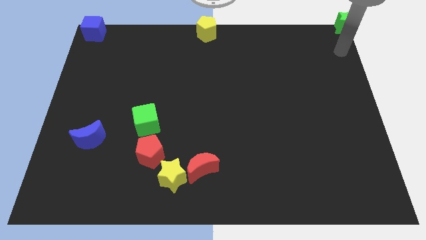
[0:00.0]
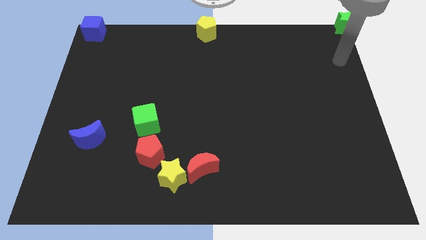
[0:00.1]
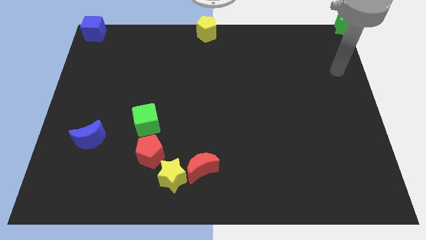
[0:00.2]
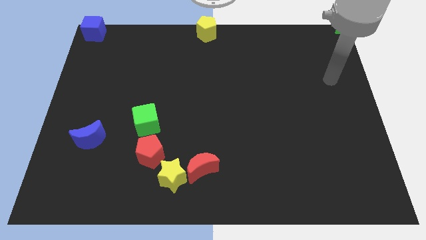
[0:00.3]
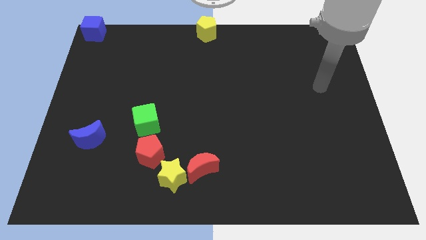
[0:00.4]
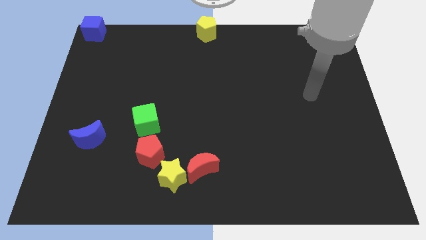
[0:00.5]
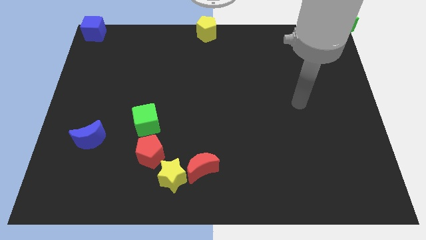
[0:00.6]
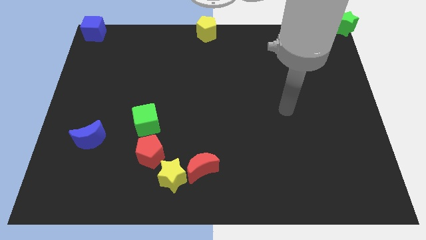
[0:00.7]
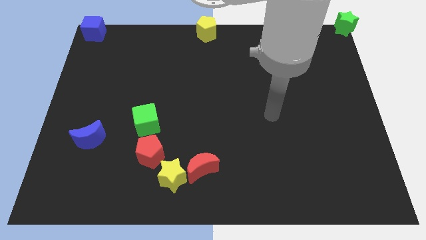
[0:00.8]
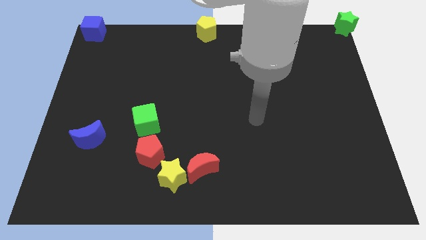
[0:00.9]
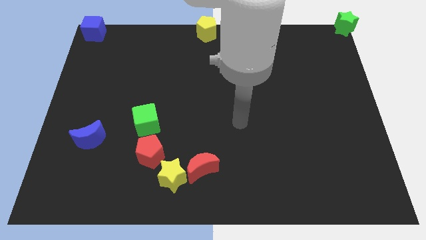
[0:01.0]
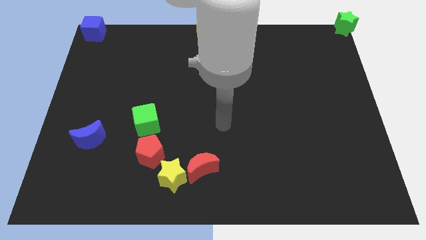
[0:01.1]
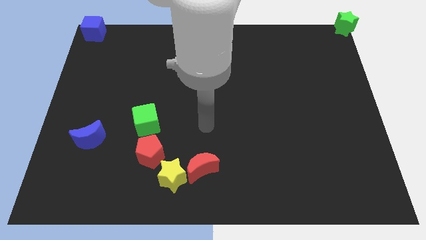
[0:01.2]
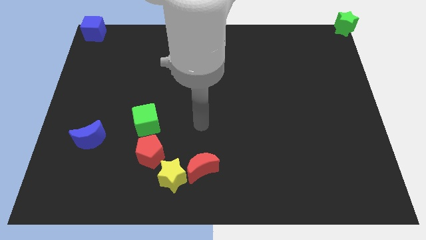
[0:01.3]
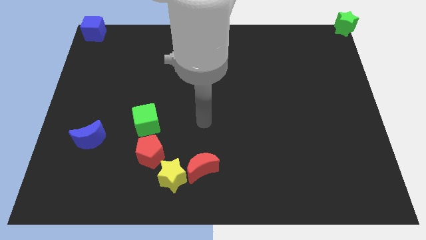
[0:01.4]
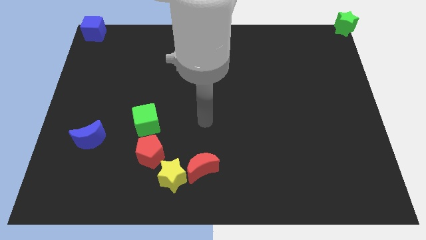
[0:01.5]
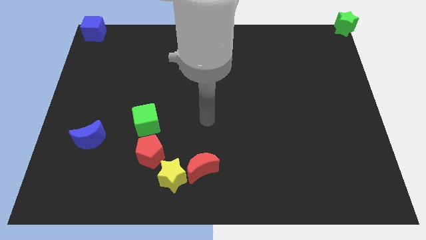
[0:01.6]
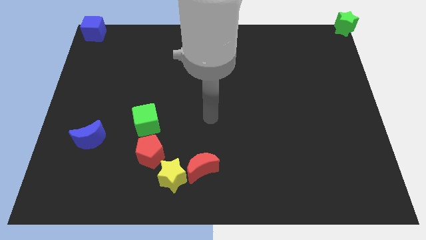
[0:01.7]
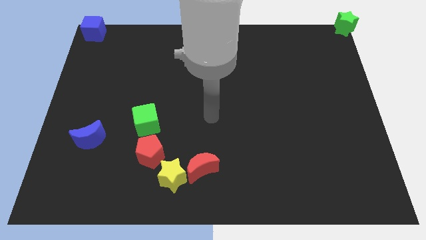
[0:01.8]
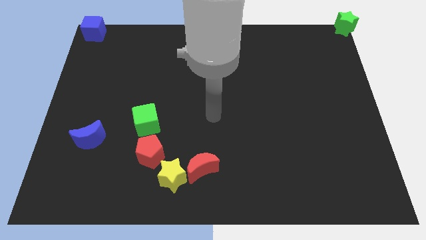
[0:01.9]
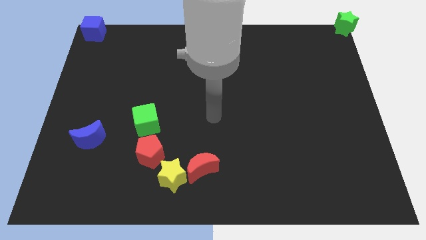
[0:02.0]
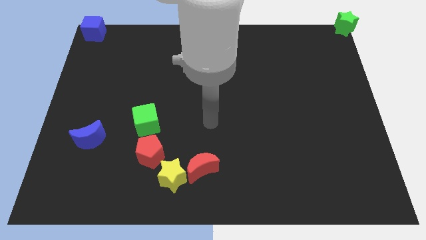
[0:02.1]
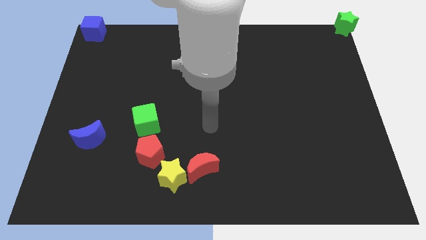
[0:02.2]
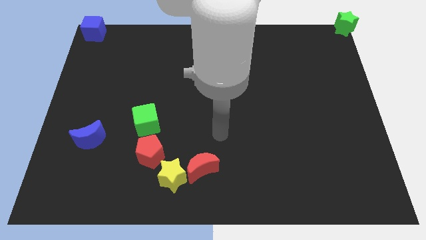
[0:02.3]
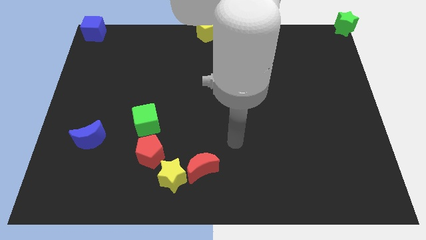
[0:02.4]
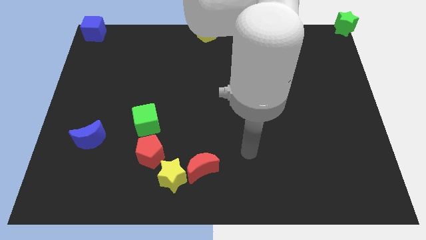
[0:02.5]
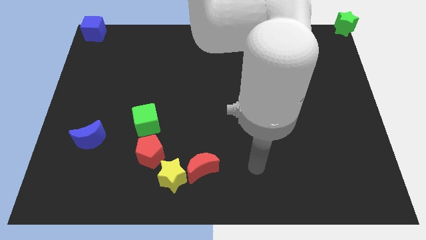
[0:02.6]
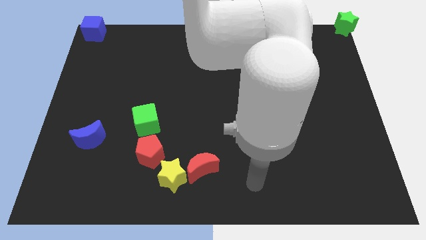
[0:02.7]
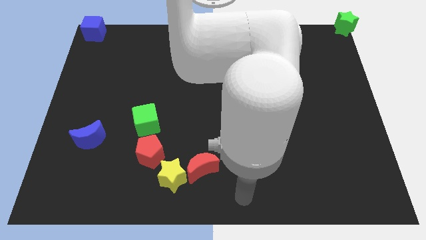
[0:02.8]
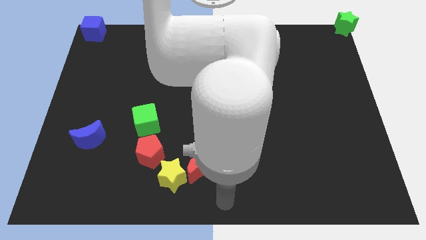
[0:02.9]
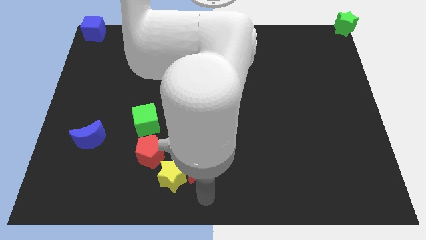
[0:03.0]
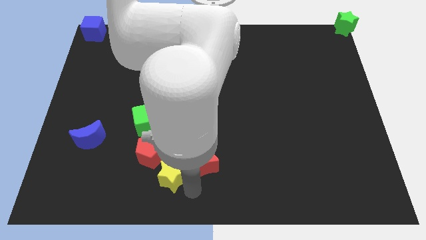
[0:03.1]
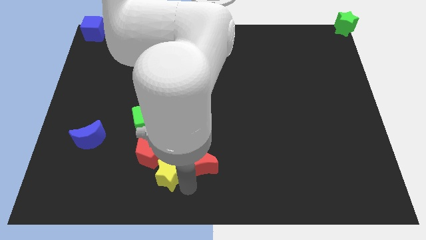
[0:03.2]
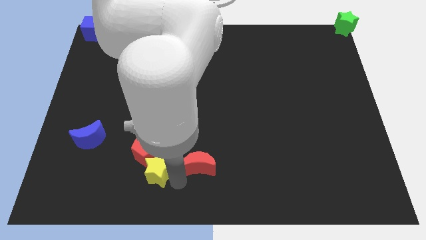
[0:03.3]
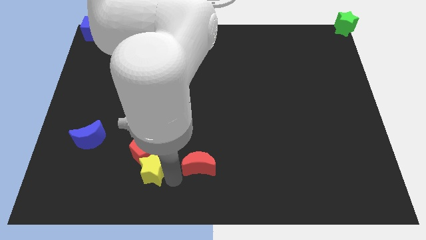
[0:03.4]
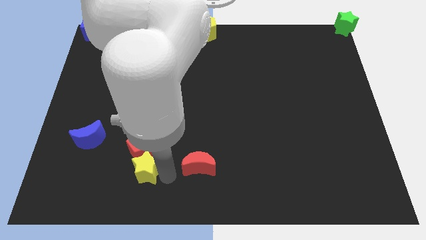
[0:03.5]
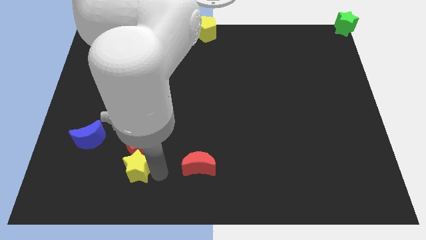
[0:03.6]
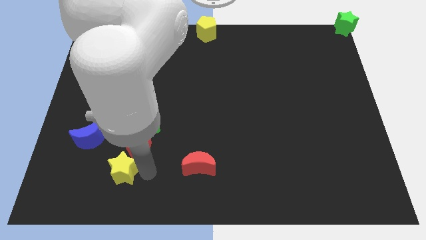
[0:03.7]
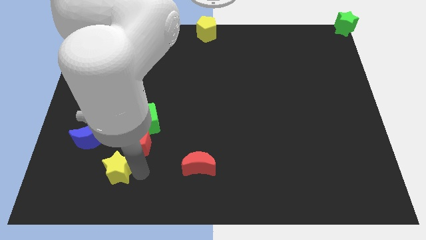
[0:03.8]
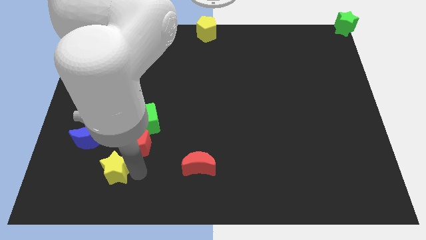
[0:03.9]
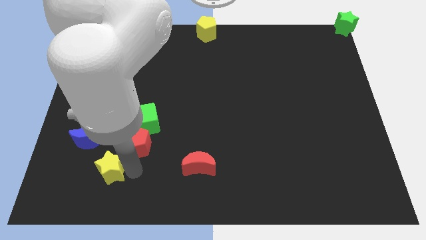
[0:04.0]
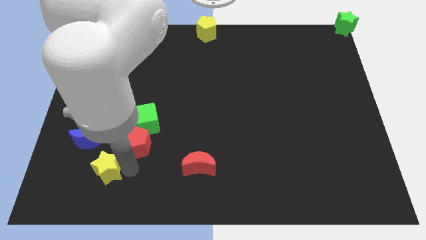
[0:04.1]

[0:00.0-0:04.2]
move the yellow star away from the red moon

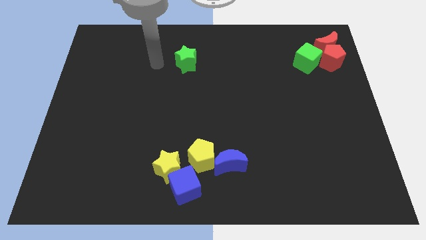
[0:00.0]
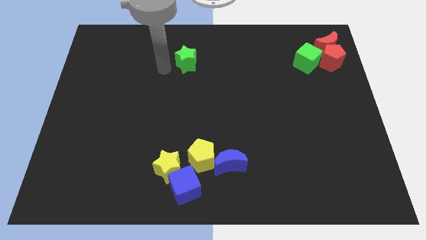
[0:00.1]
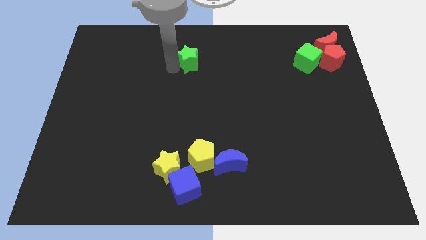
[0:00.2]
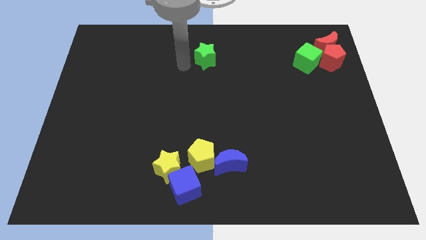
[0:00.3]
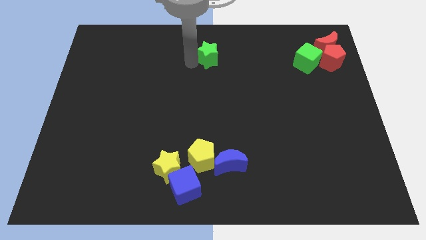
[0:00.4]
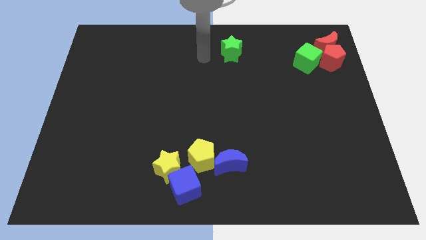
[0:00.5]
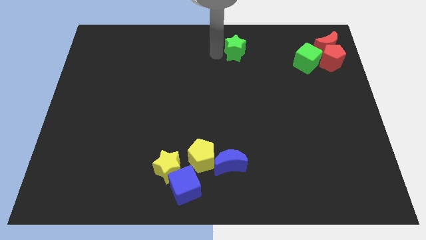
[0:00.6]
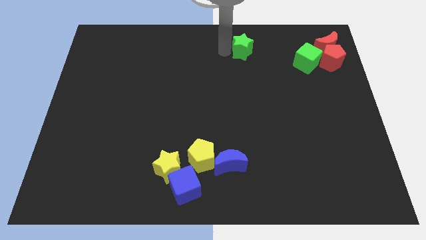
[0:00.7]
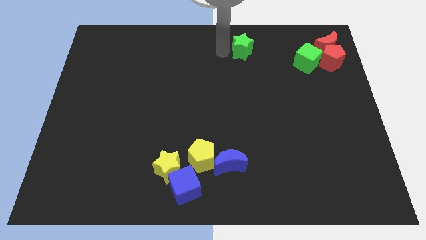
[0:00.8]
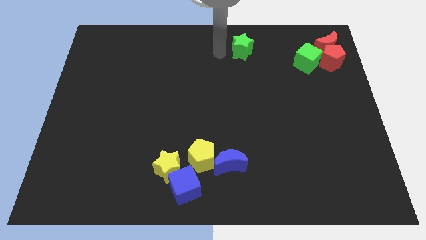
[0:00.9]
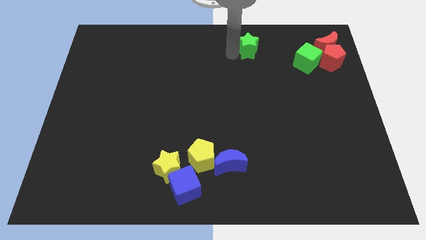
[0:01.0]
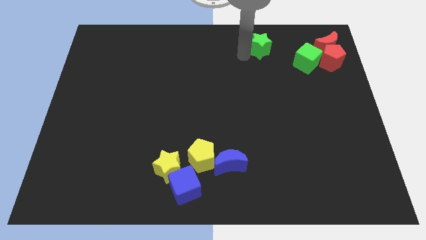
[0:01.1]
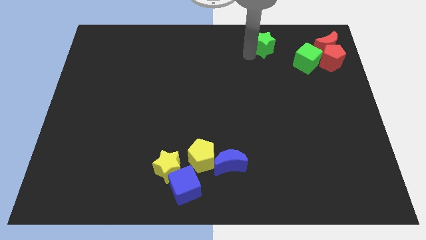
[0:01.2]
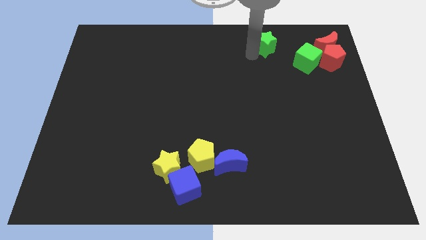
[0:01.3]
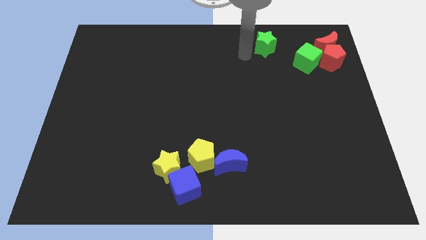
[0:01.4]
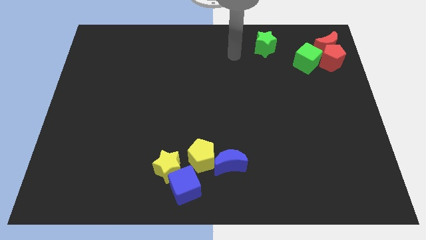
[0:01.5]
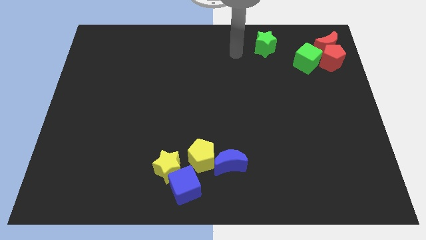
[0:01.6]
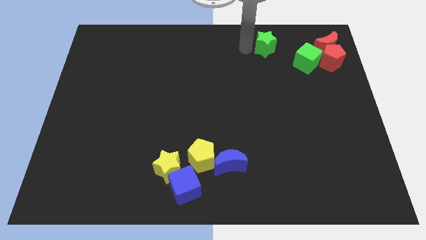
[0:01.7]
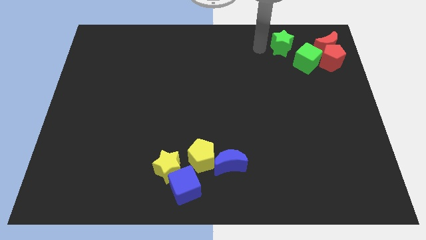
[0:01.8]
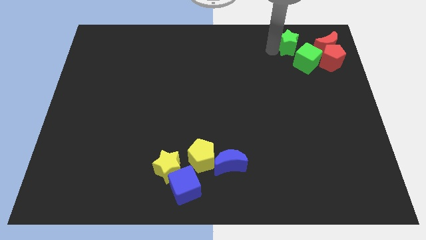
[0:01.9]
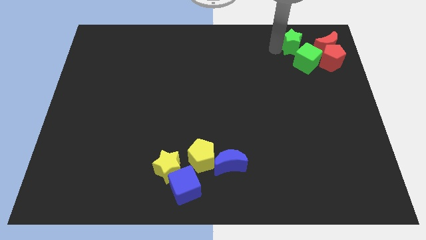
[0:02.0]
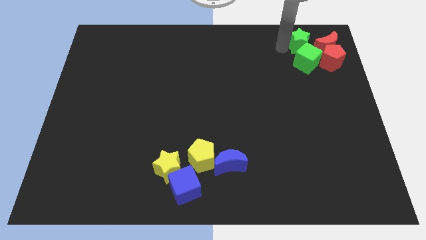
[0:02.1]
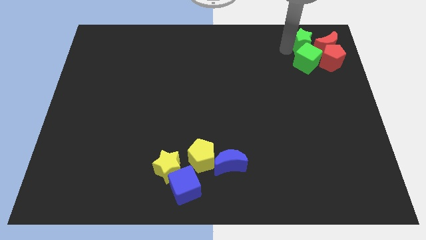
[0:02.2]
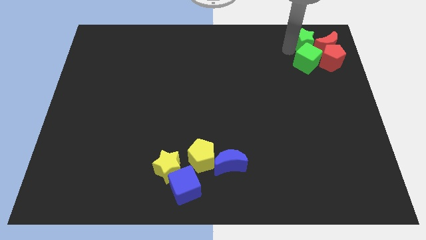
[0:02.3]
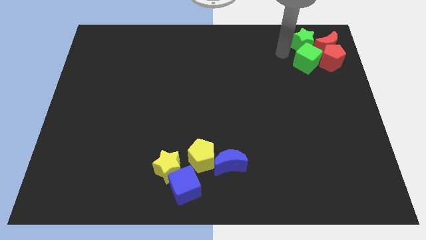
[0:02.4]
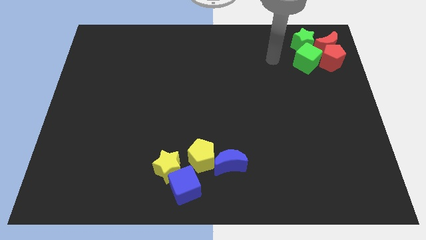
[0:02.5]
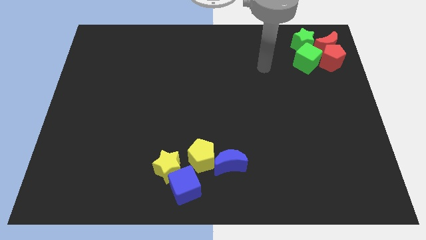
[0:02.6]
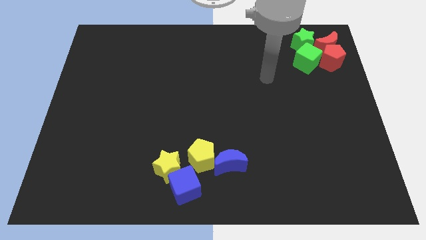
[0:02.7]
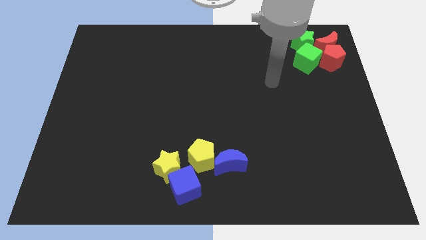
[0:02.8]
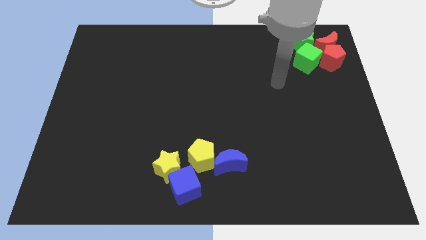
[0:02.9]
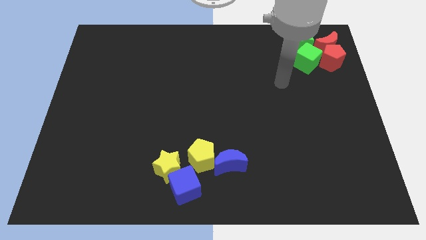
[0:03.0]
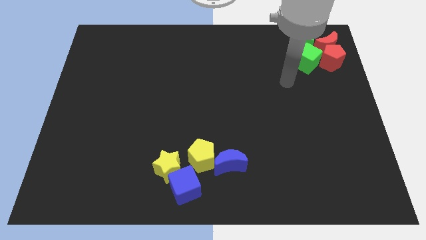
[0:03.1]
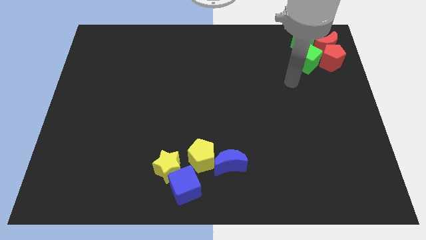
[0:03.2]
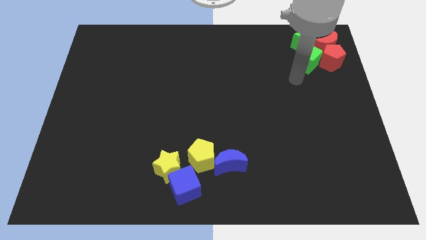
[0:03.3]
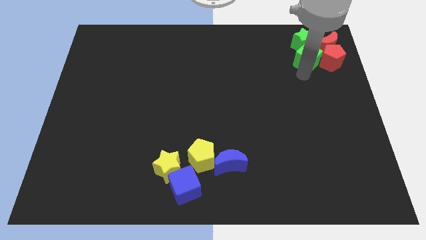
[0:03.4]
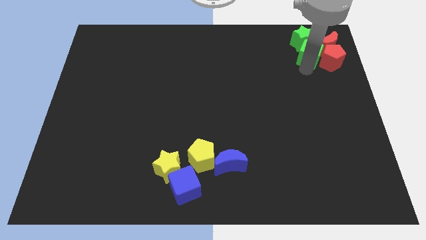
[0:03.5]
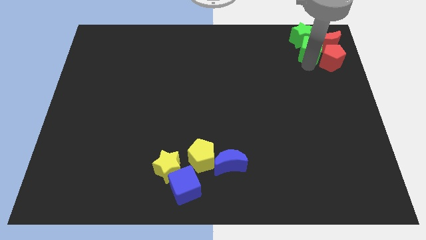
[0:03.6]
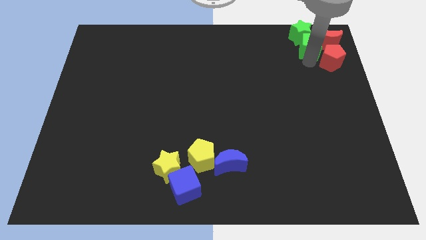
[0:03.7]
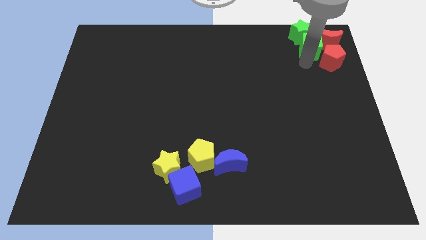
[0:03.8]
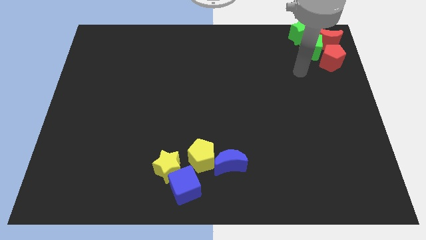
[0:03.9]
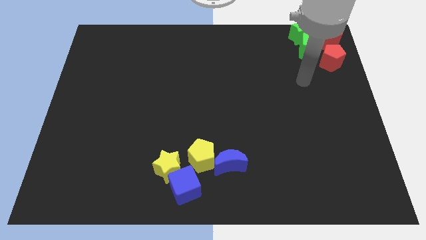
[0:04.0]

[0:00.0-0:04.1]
push the green star into the group of blocks

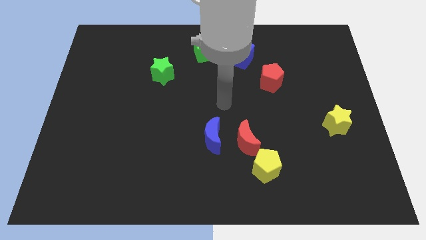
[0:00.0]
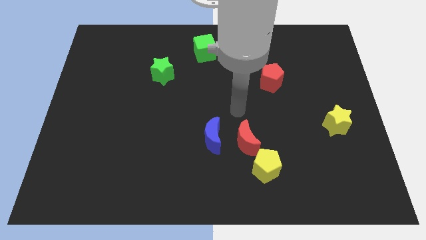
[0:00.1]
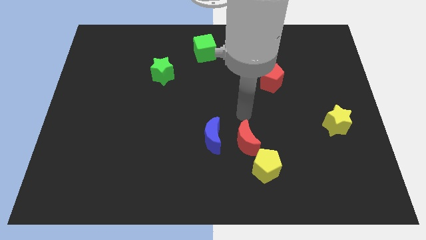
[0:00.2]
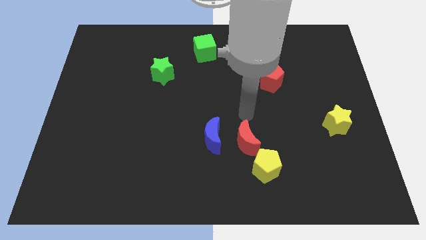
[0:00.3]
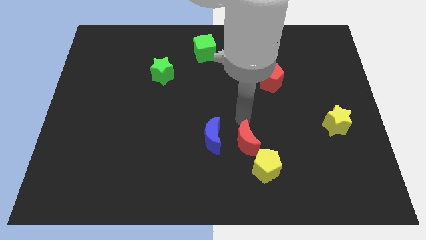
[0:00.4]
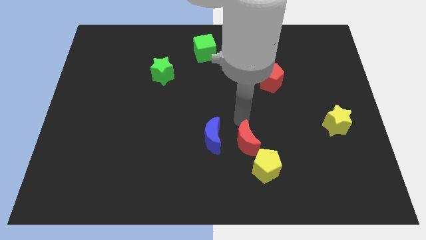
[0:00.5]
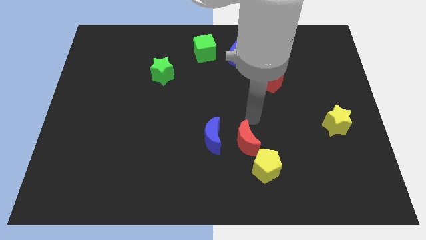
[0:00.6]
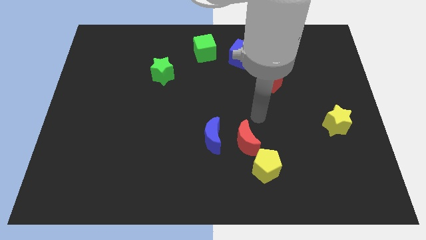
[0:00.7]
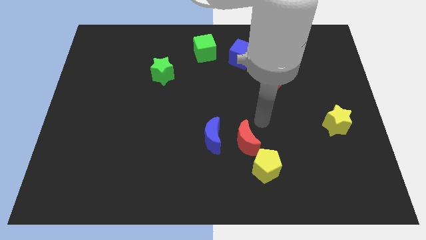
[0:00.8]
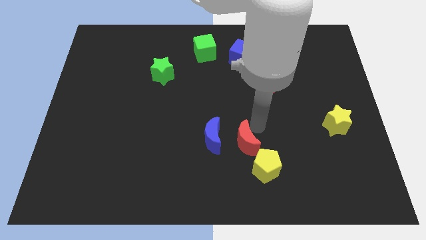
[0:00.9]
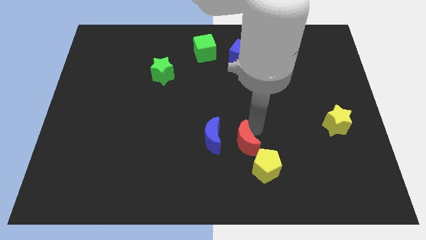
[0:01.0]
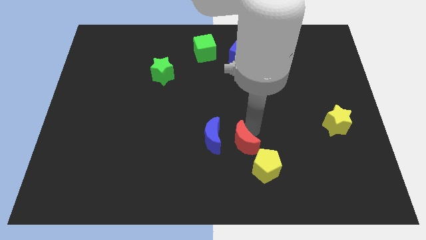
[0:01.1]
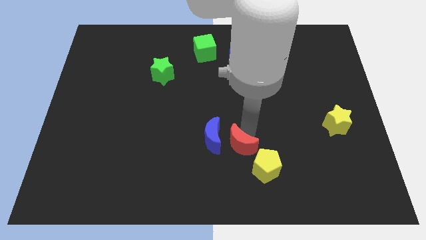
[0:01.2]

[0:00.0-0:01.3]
tap the right side of the red crescent
